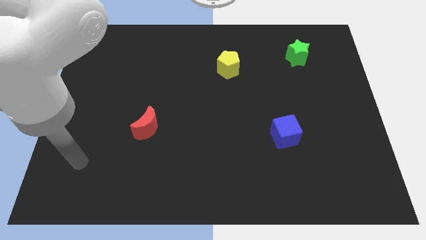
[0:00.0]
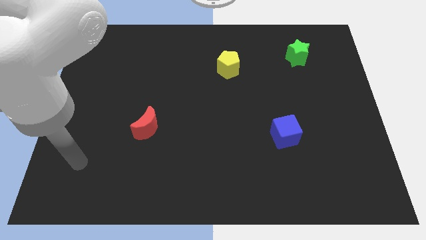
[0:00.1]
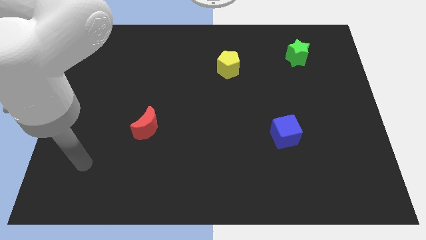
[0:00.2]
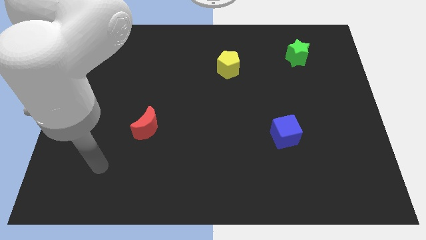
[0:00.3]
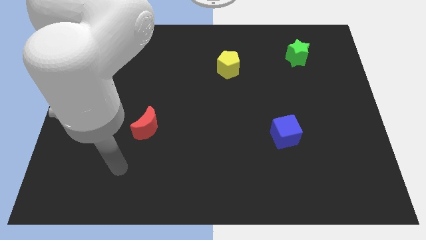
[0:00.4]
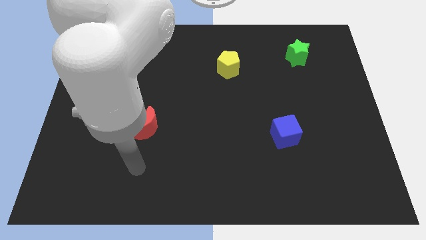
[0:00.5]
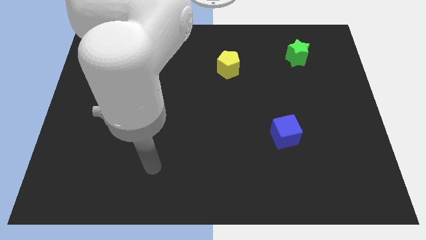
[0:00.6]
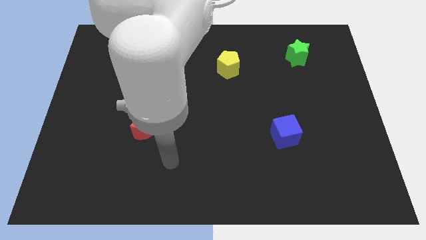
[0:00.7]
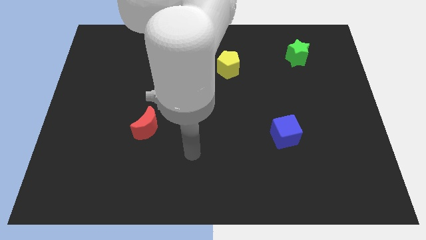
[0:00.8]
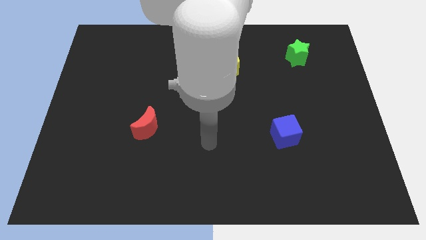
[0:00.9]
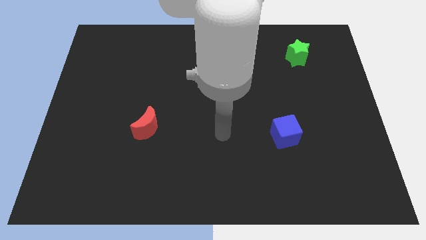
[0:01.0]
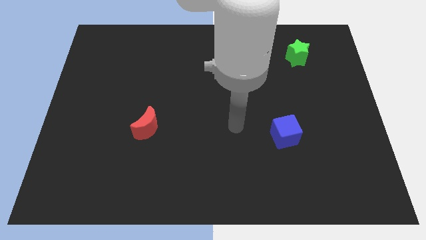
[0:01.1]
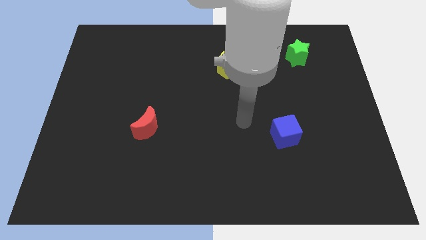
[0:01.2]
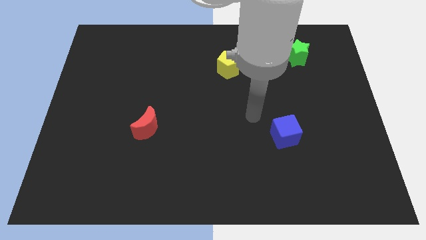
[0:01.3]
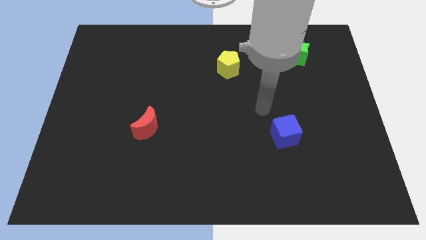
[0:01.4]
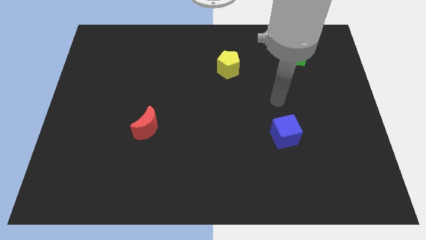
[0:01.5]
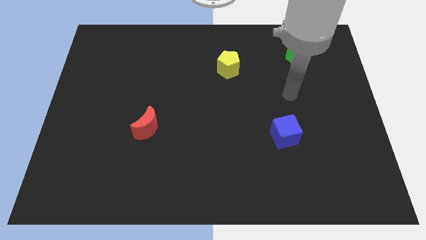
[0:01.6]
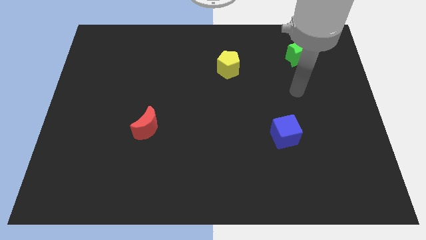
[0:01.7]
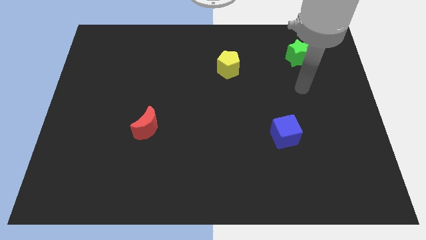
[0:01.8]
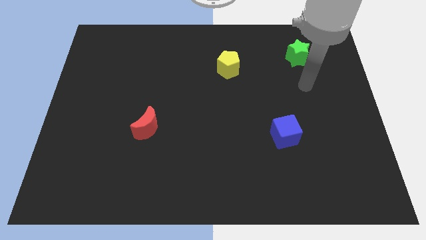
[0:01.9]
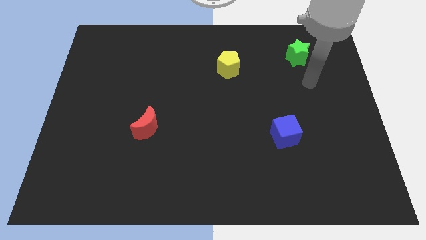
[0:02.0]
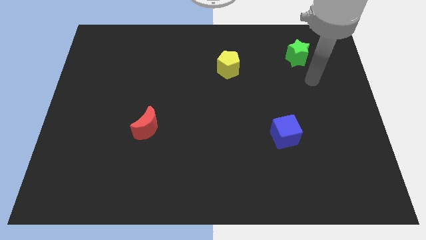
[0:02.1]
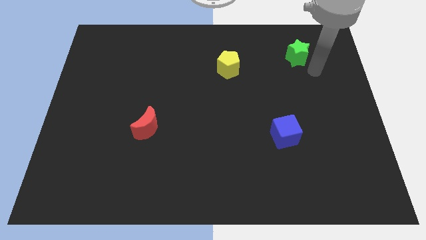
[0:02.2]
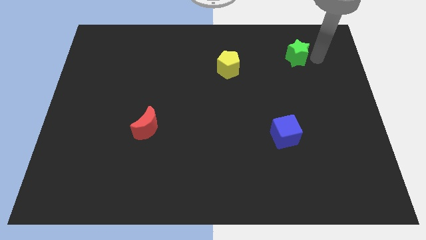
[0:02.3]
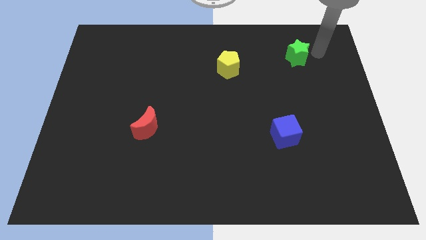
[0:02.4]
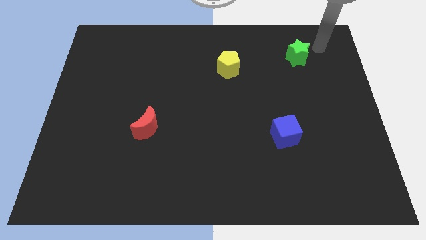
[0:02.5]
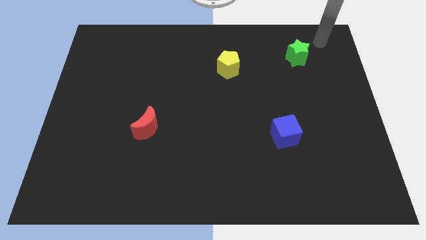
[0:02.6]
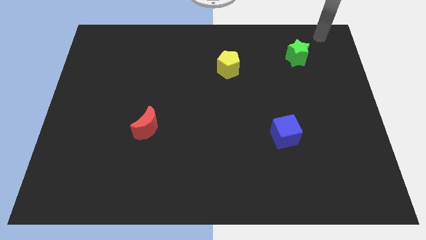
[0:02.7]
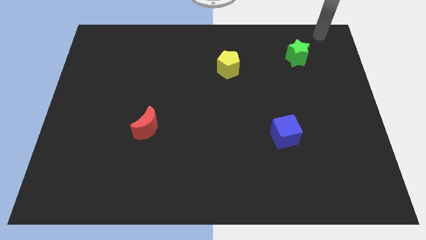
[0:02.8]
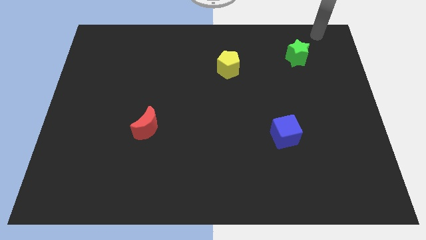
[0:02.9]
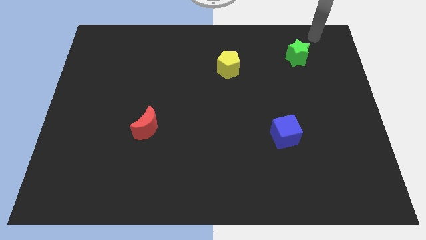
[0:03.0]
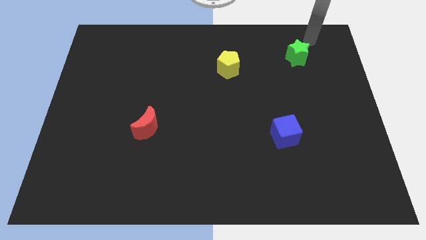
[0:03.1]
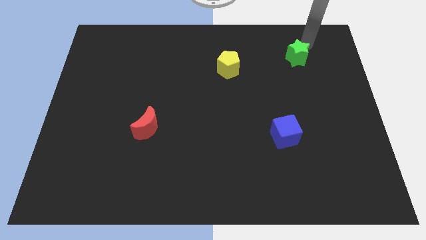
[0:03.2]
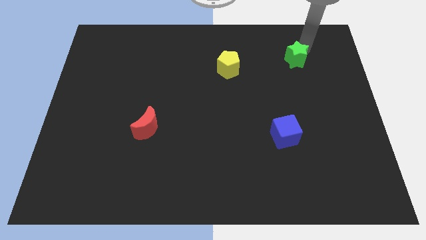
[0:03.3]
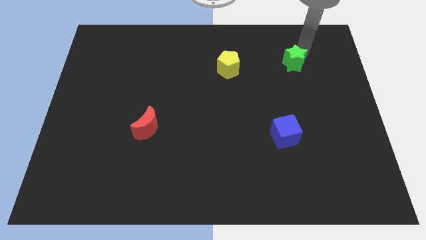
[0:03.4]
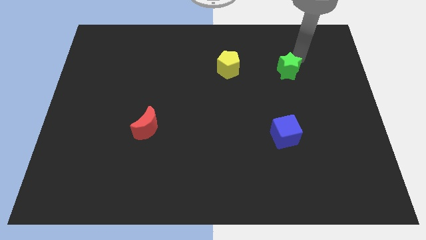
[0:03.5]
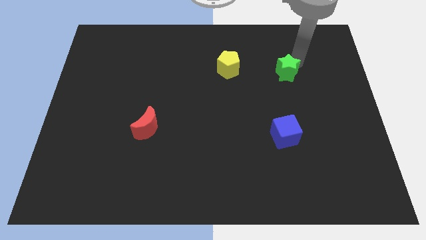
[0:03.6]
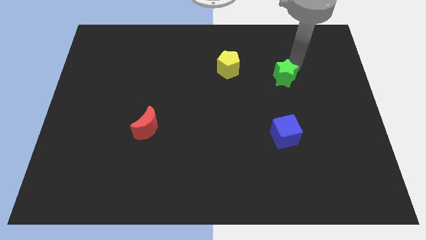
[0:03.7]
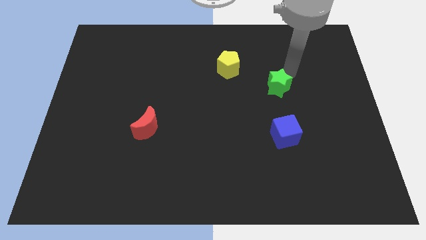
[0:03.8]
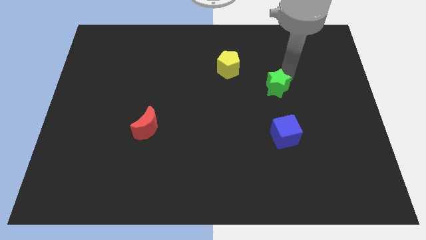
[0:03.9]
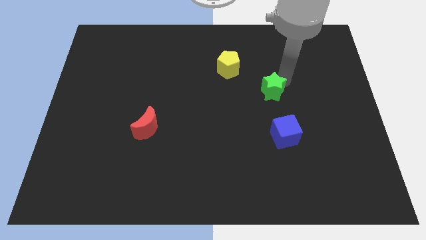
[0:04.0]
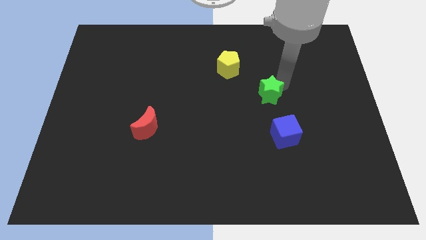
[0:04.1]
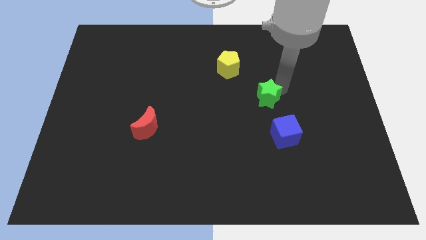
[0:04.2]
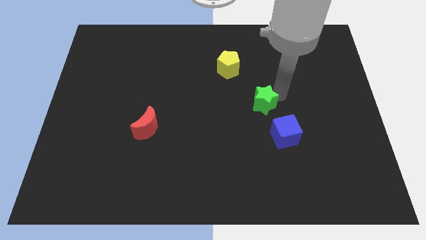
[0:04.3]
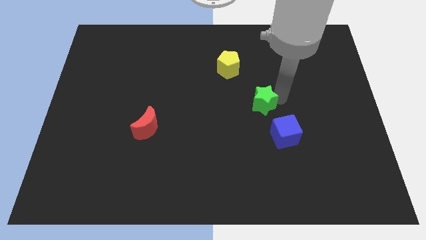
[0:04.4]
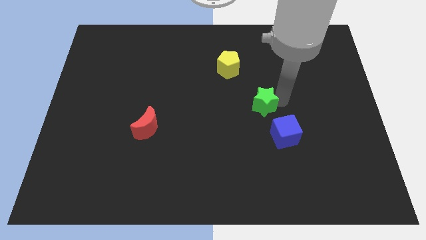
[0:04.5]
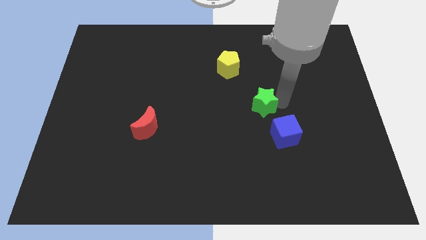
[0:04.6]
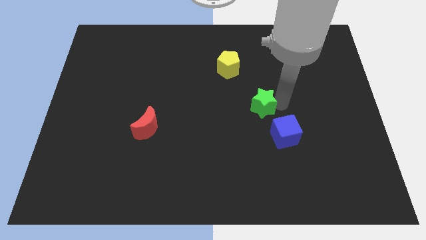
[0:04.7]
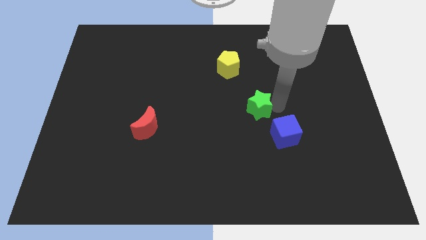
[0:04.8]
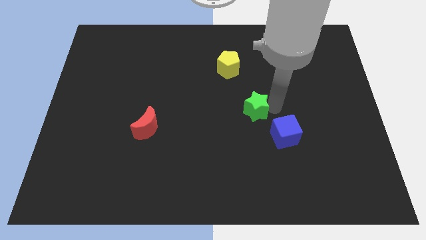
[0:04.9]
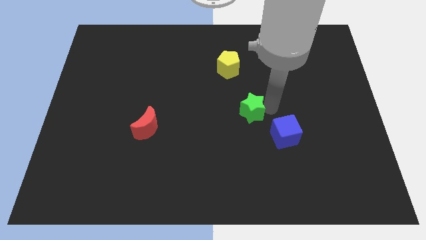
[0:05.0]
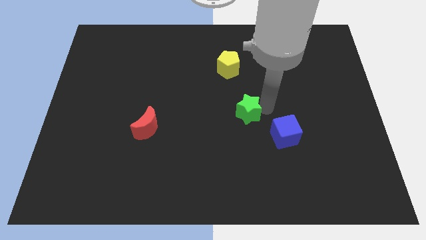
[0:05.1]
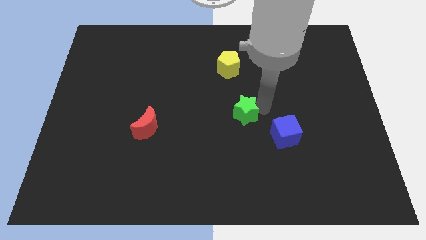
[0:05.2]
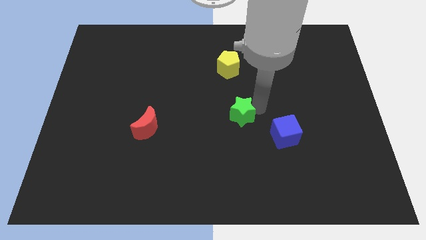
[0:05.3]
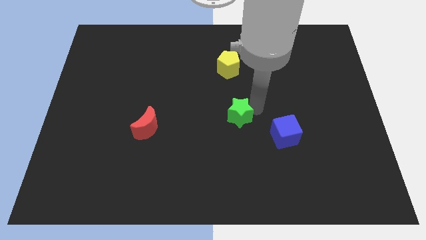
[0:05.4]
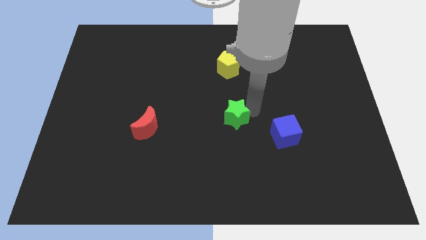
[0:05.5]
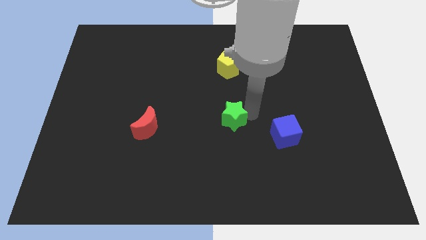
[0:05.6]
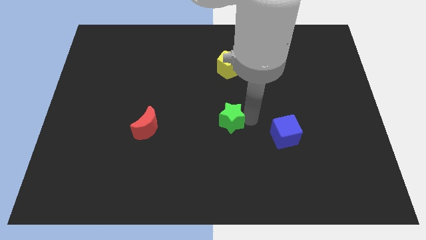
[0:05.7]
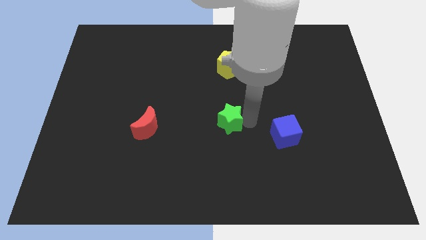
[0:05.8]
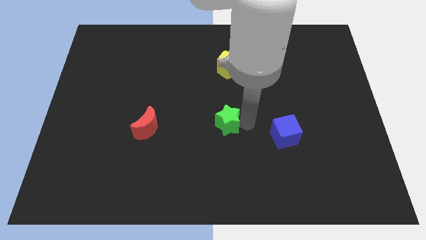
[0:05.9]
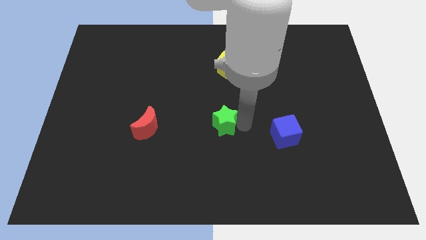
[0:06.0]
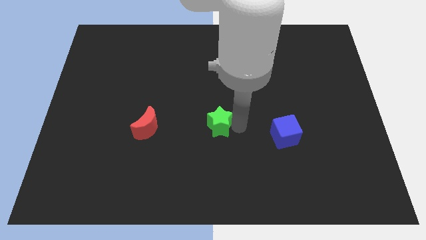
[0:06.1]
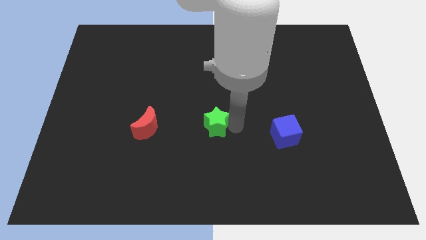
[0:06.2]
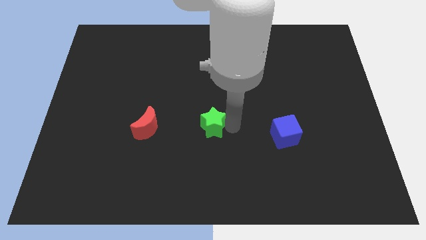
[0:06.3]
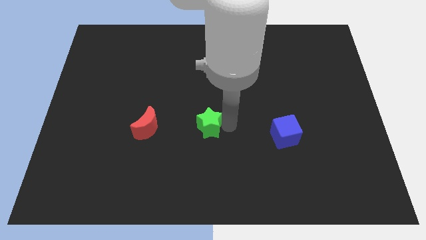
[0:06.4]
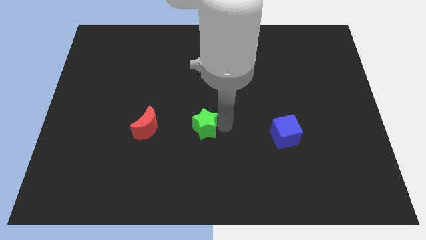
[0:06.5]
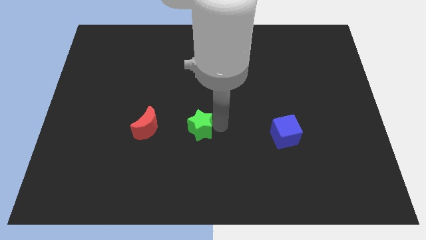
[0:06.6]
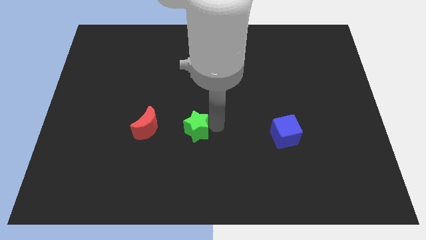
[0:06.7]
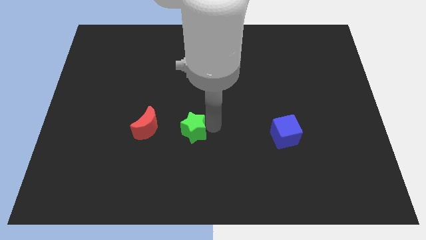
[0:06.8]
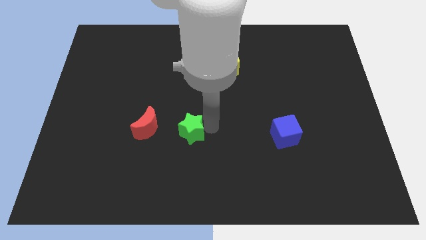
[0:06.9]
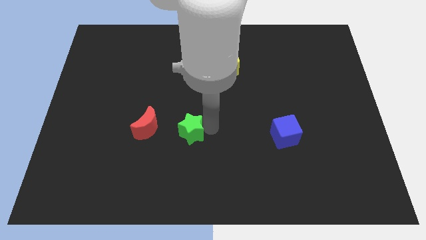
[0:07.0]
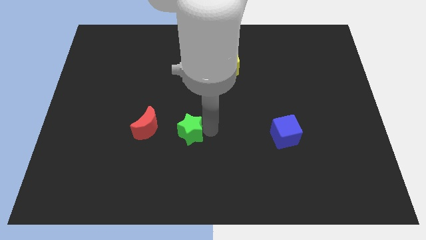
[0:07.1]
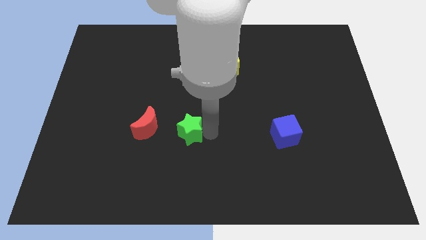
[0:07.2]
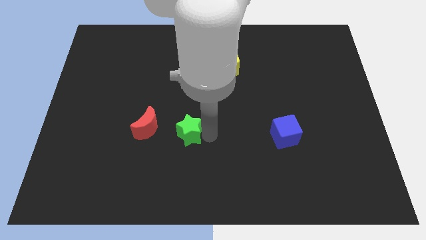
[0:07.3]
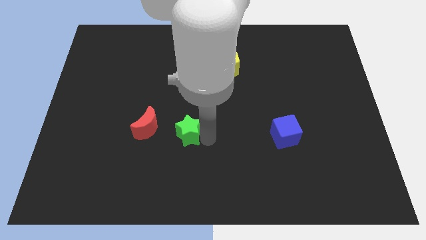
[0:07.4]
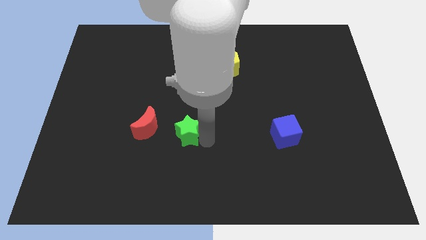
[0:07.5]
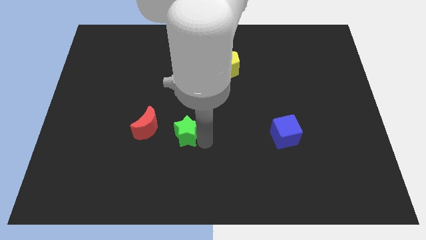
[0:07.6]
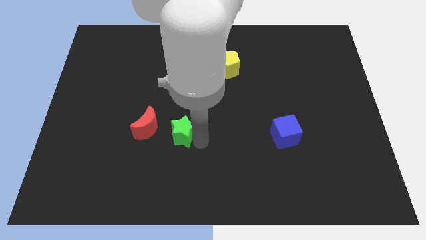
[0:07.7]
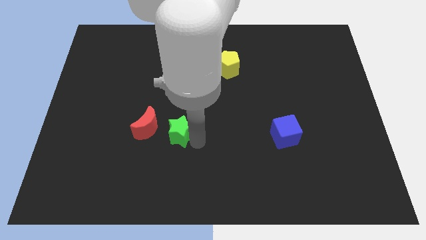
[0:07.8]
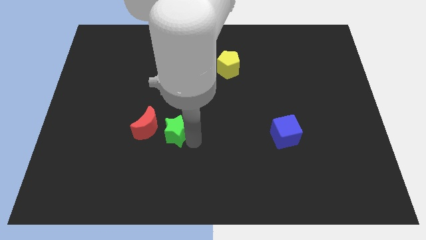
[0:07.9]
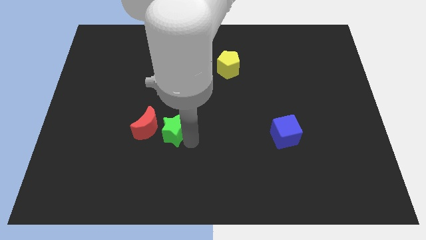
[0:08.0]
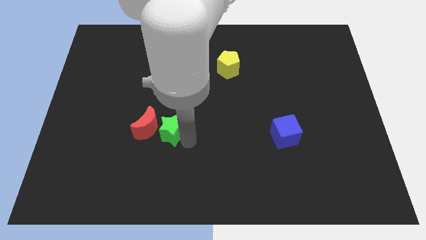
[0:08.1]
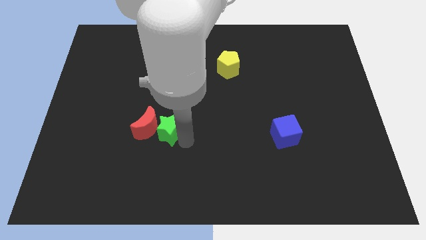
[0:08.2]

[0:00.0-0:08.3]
slide the green block to the moon

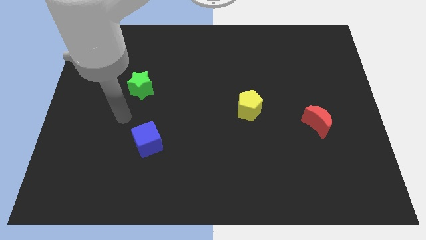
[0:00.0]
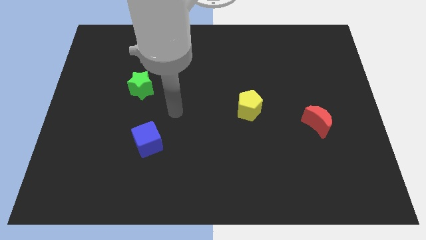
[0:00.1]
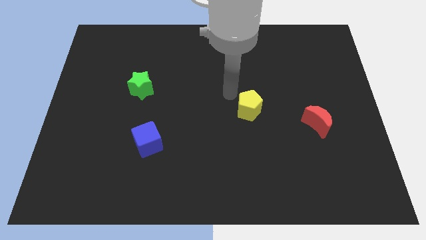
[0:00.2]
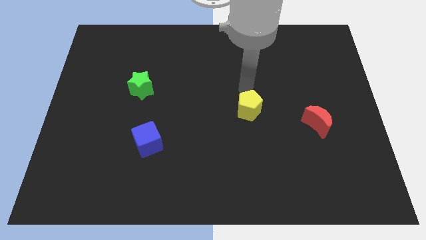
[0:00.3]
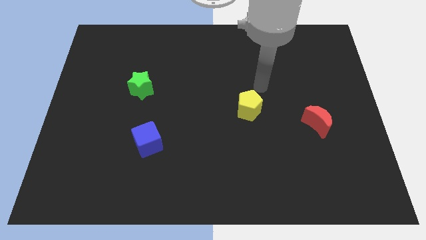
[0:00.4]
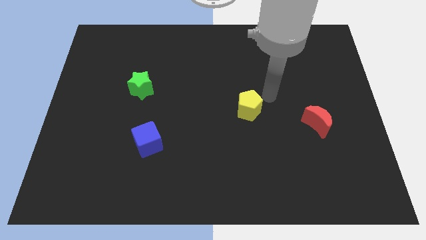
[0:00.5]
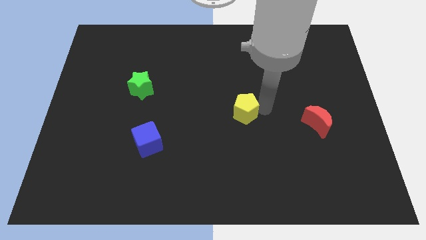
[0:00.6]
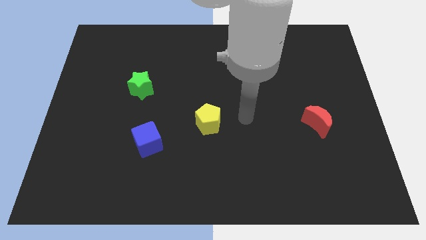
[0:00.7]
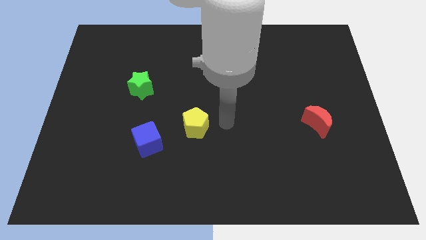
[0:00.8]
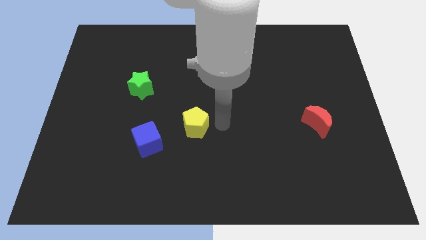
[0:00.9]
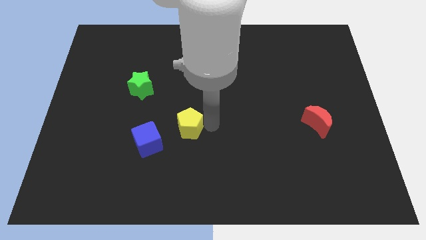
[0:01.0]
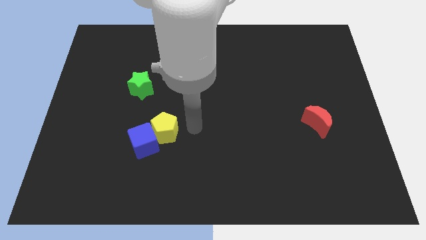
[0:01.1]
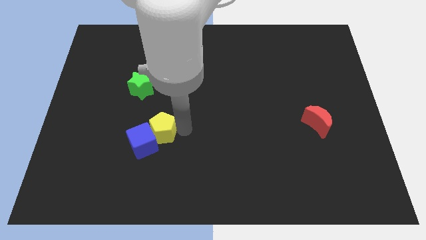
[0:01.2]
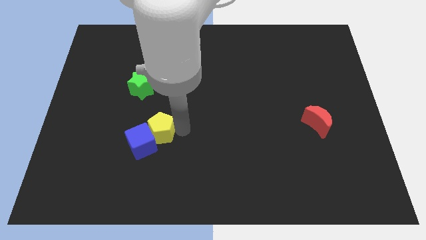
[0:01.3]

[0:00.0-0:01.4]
slide the pentagon towards the cube
